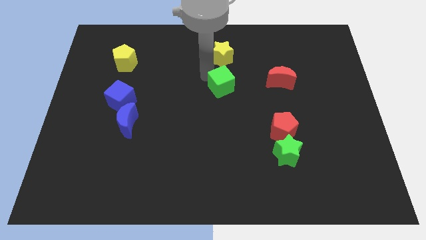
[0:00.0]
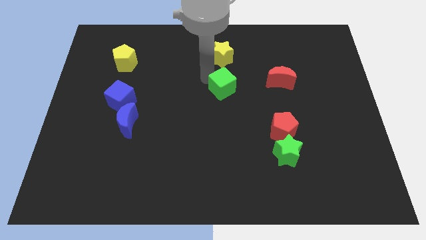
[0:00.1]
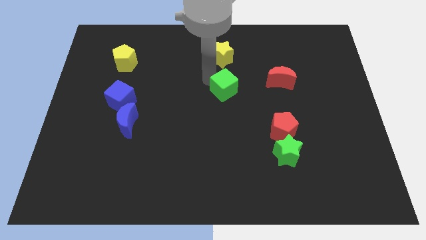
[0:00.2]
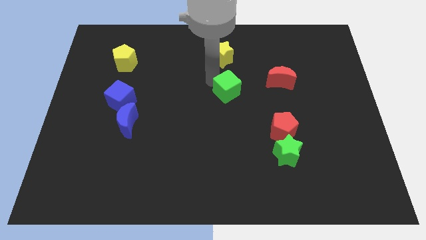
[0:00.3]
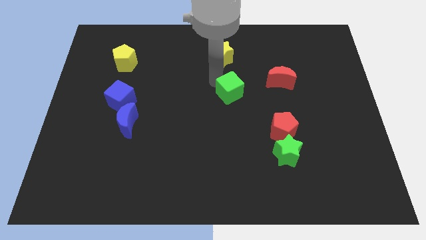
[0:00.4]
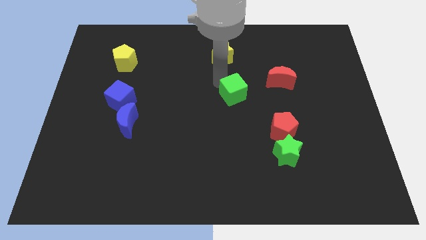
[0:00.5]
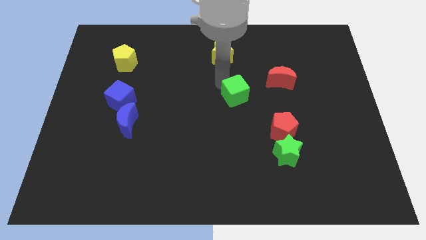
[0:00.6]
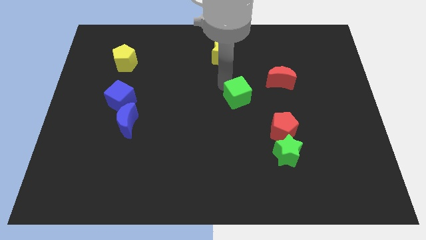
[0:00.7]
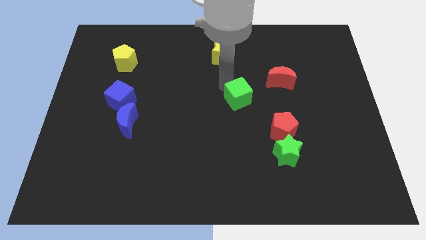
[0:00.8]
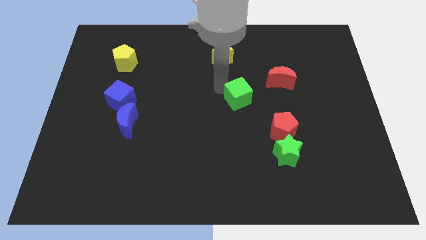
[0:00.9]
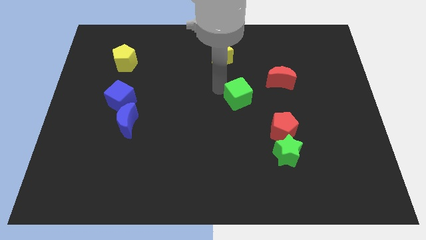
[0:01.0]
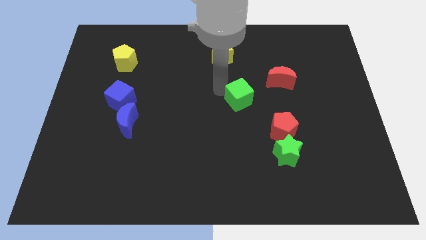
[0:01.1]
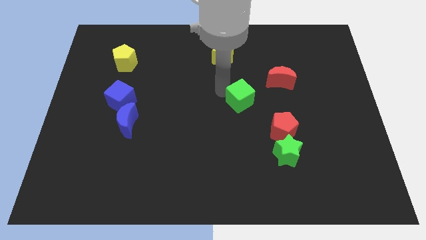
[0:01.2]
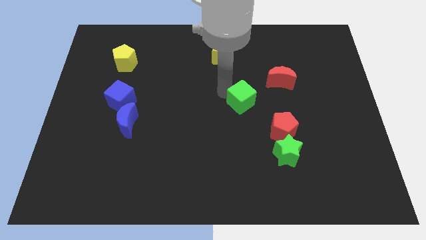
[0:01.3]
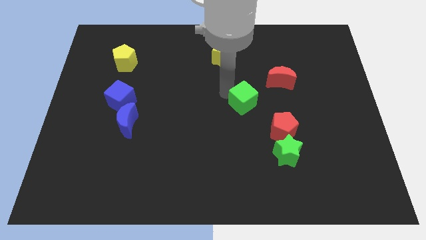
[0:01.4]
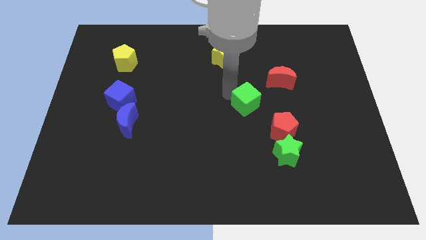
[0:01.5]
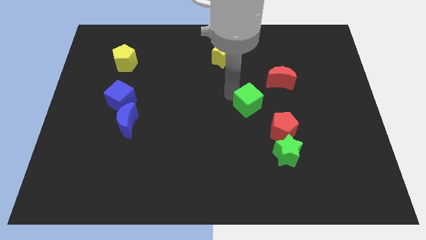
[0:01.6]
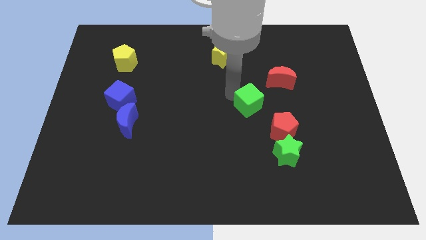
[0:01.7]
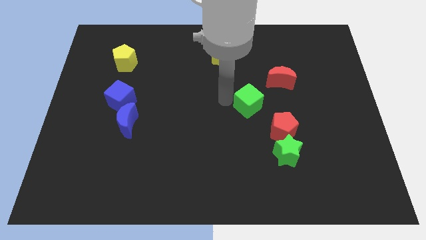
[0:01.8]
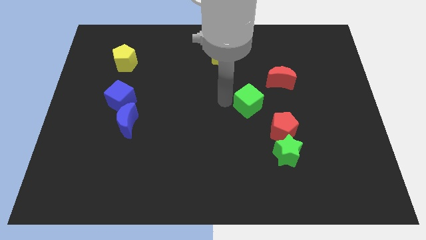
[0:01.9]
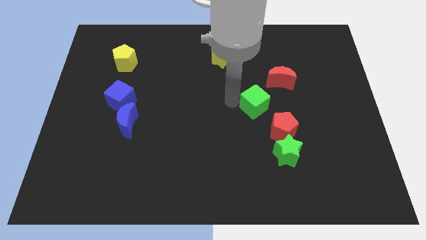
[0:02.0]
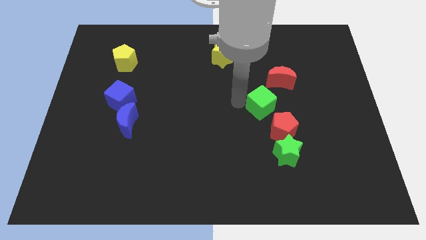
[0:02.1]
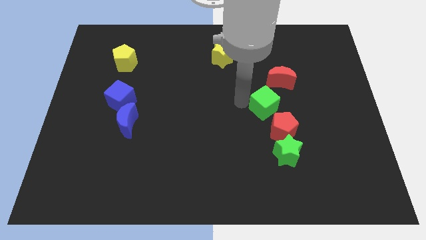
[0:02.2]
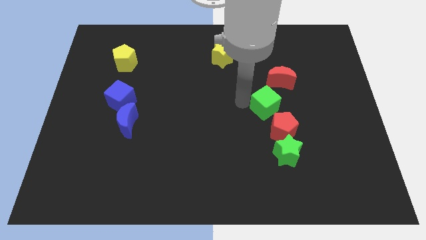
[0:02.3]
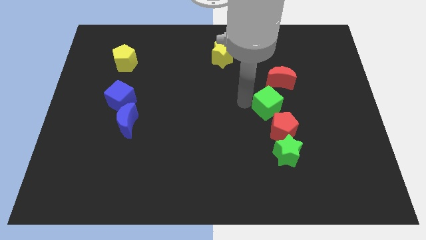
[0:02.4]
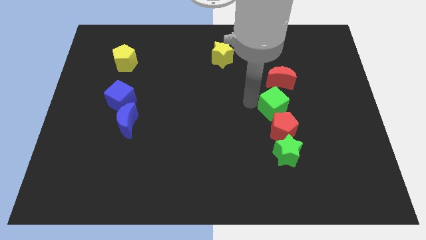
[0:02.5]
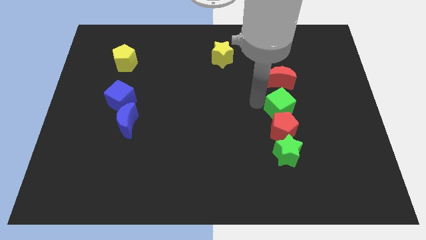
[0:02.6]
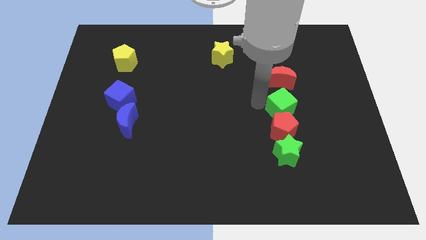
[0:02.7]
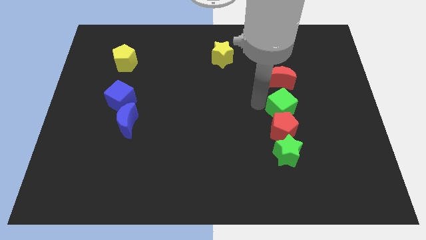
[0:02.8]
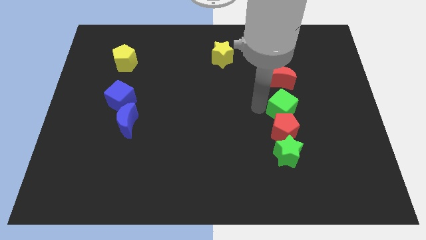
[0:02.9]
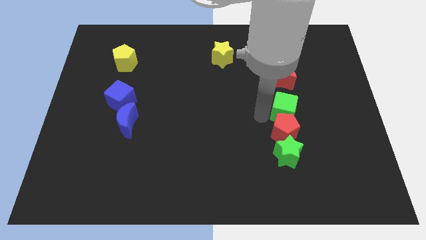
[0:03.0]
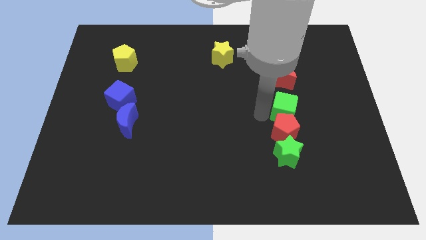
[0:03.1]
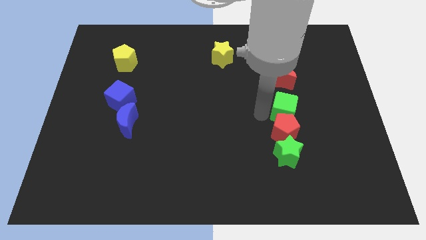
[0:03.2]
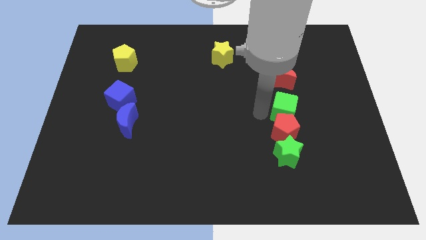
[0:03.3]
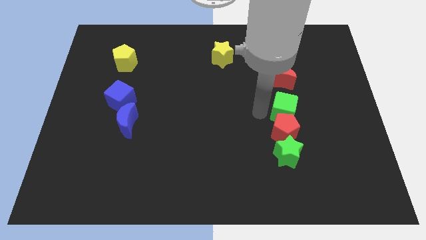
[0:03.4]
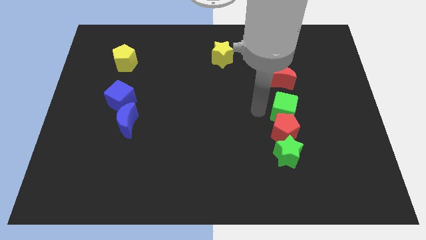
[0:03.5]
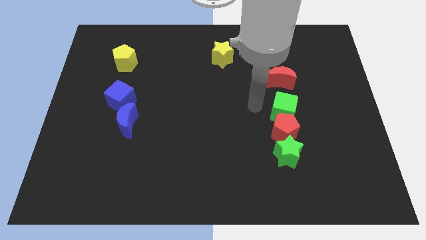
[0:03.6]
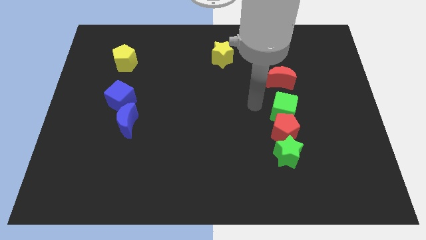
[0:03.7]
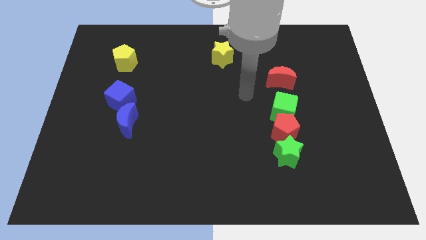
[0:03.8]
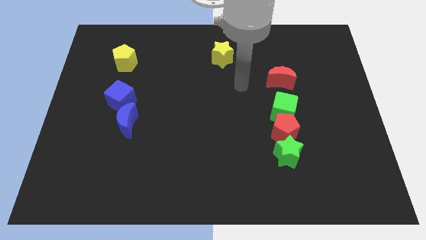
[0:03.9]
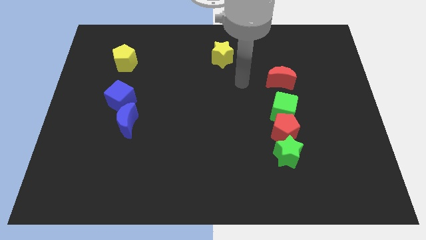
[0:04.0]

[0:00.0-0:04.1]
place the green cube on top of red pentgaon

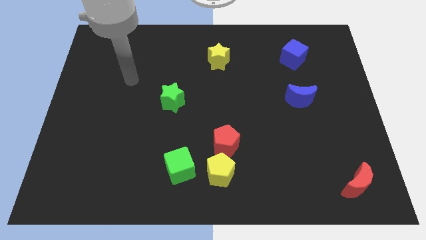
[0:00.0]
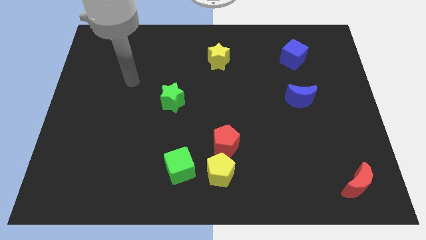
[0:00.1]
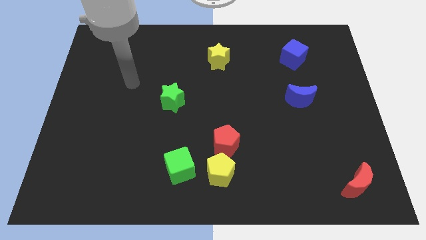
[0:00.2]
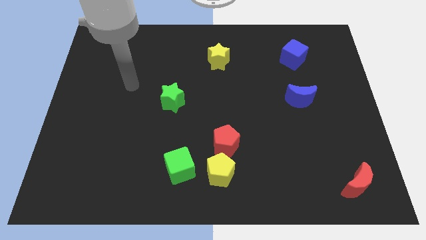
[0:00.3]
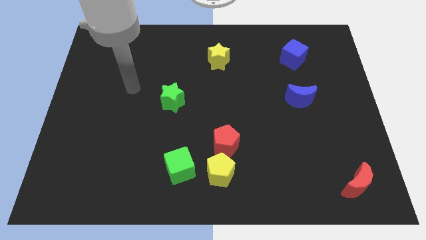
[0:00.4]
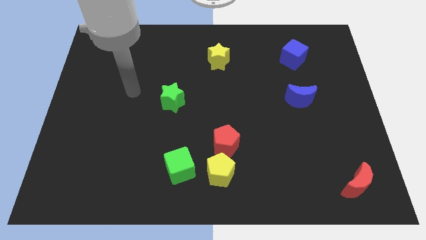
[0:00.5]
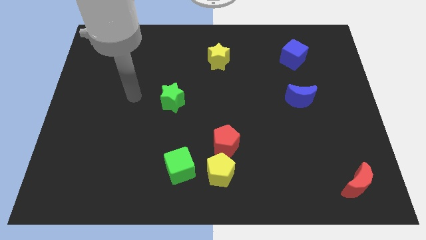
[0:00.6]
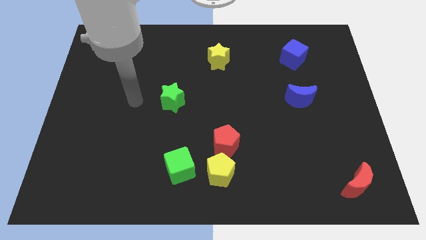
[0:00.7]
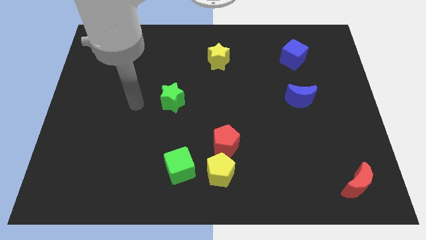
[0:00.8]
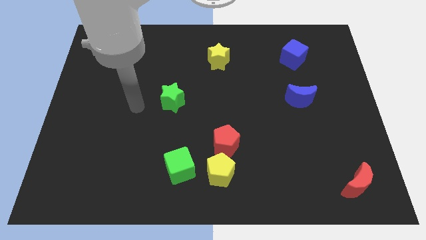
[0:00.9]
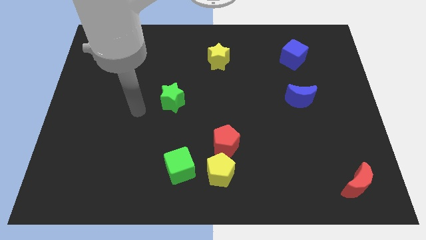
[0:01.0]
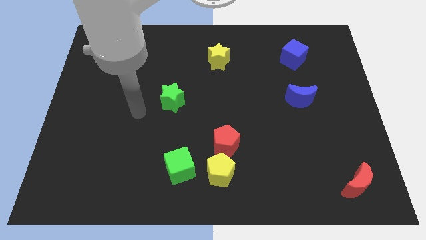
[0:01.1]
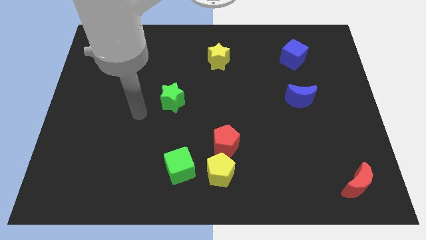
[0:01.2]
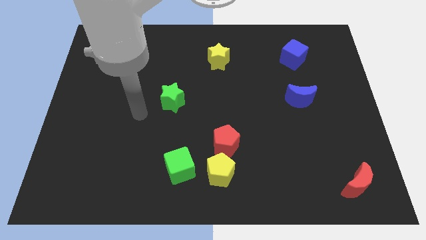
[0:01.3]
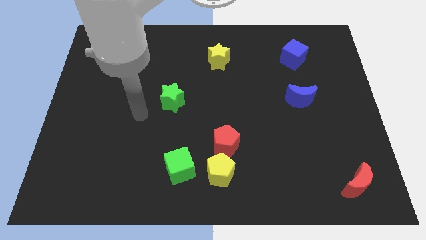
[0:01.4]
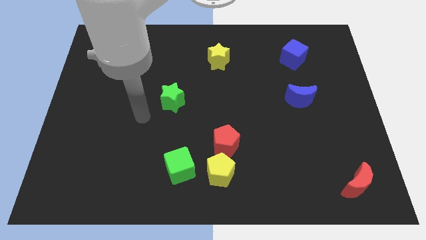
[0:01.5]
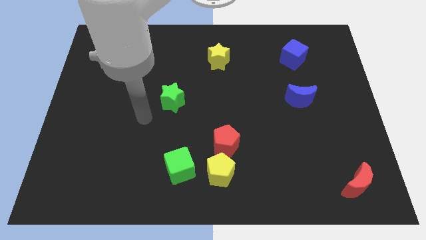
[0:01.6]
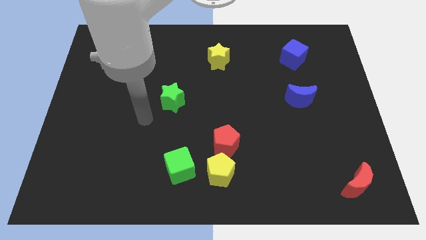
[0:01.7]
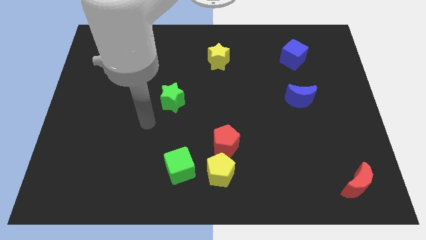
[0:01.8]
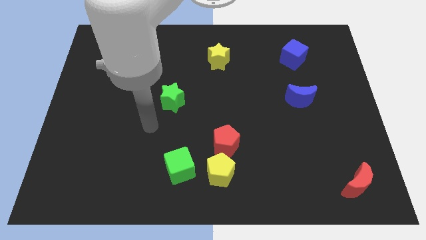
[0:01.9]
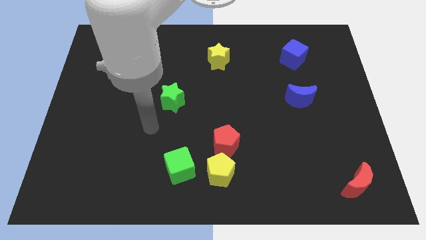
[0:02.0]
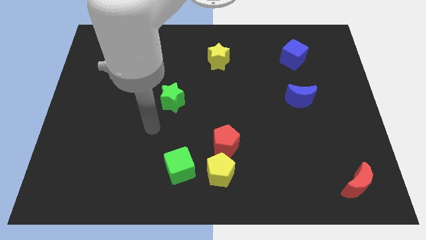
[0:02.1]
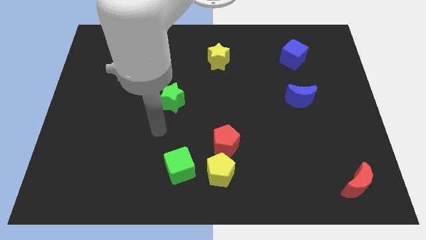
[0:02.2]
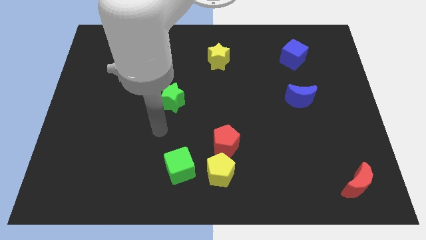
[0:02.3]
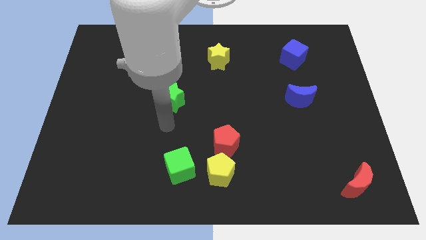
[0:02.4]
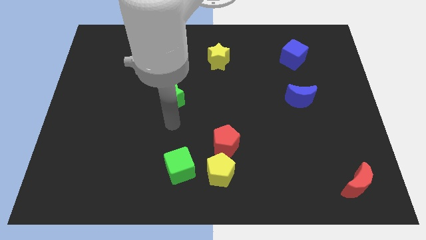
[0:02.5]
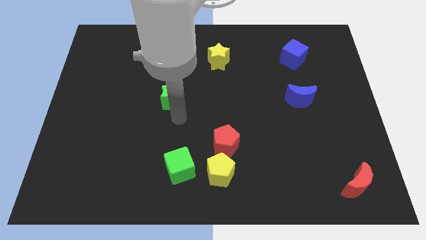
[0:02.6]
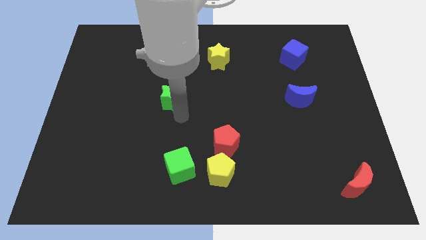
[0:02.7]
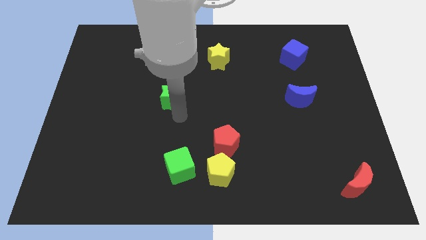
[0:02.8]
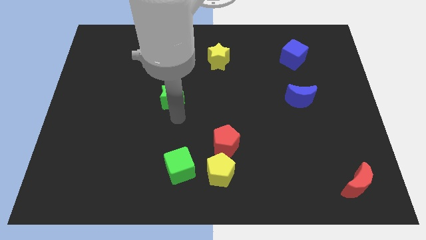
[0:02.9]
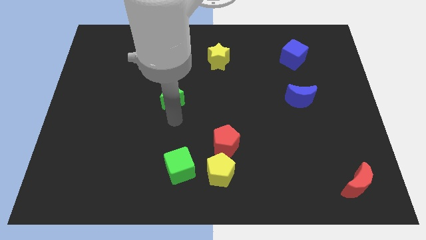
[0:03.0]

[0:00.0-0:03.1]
move your arm towards the green star

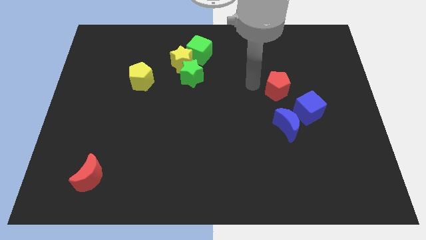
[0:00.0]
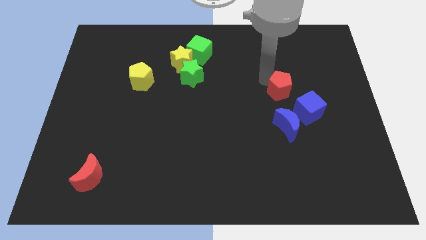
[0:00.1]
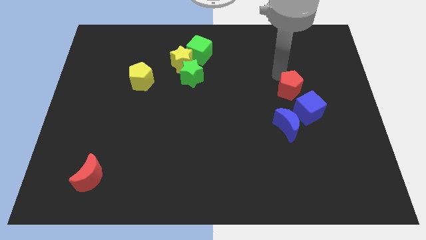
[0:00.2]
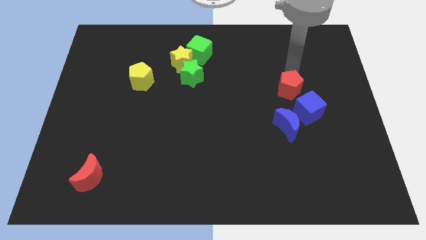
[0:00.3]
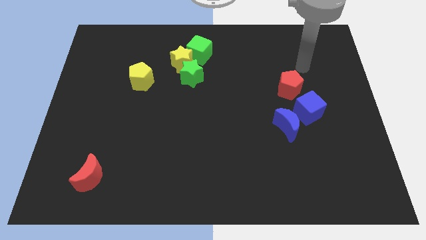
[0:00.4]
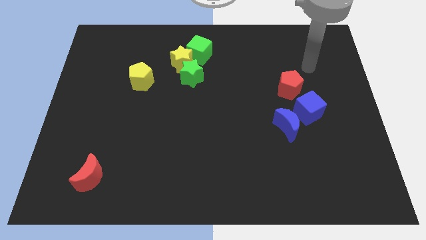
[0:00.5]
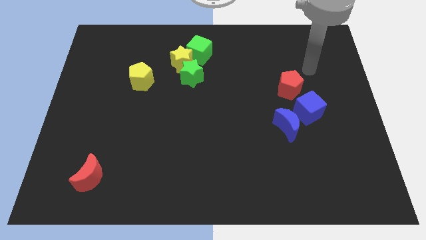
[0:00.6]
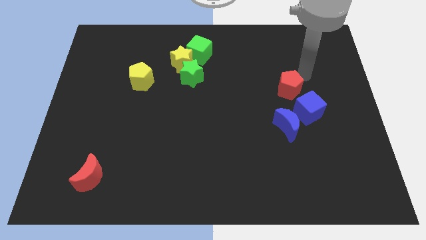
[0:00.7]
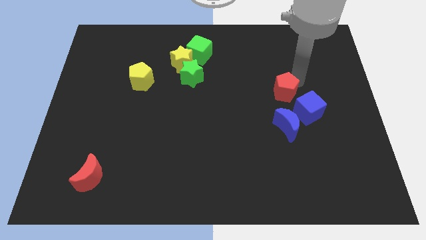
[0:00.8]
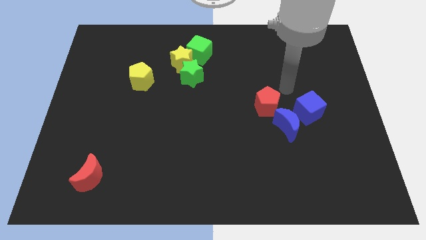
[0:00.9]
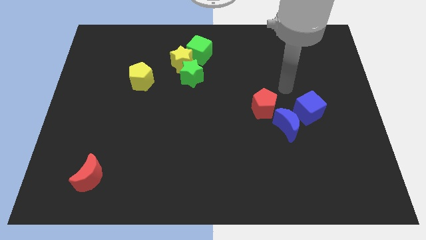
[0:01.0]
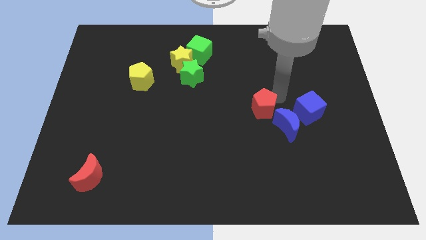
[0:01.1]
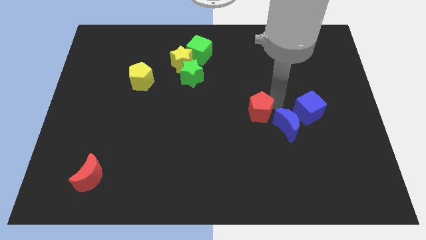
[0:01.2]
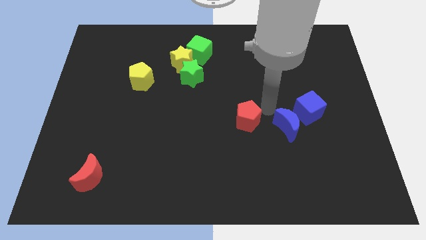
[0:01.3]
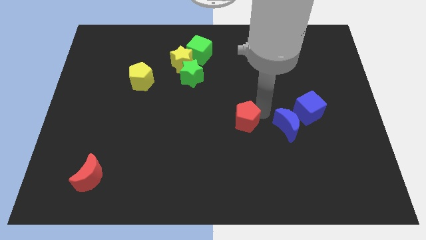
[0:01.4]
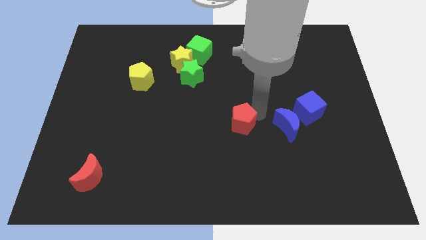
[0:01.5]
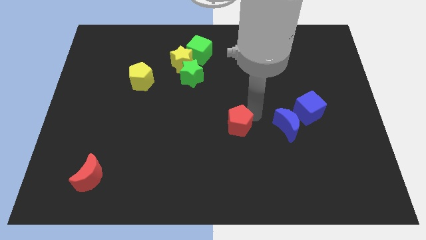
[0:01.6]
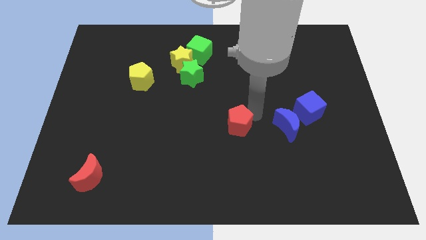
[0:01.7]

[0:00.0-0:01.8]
move the red pentagon towards the center of the board
